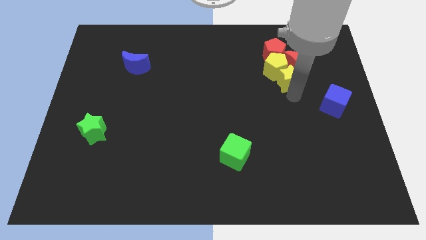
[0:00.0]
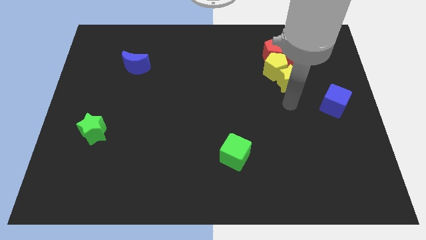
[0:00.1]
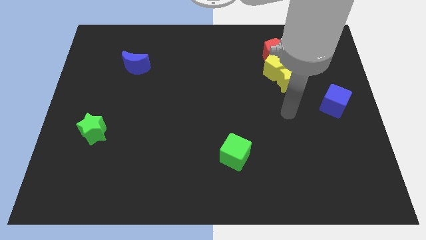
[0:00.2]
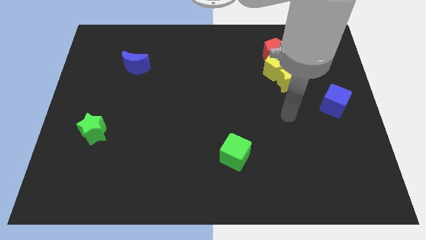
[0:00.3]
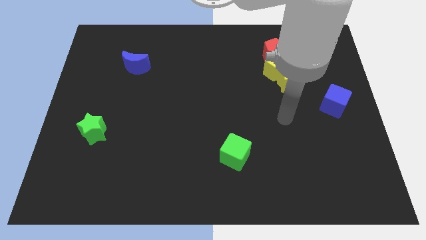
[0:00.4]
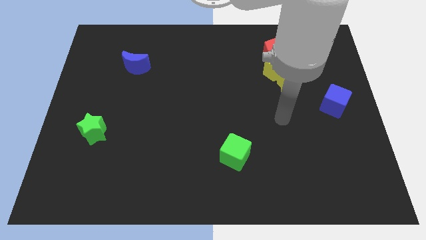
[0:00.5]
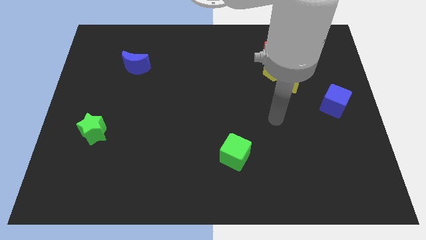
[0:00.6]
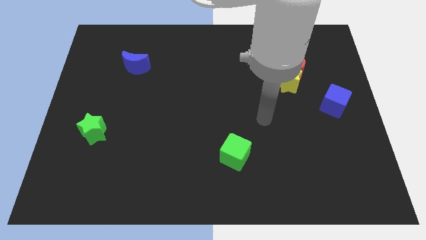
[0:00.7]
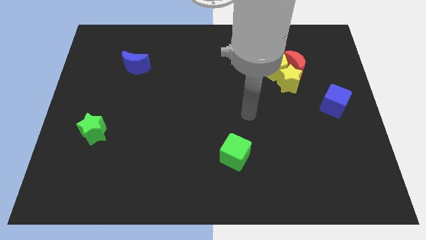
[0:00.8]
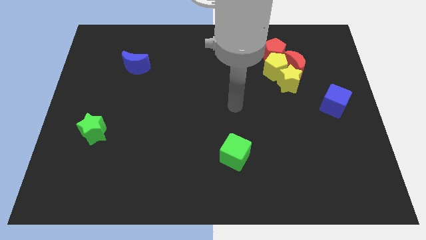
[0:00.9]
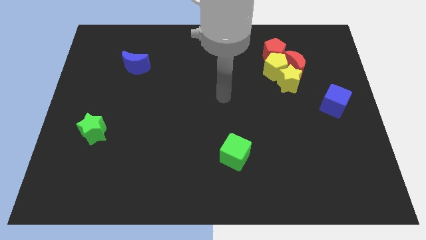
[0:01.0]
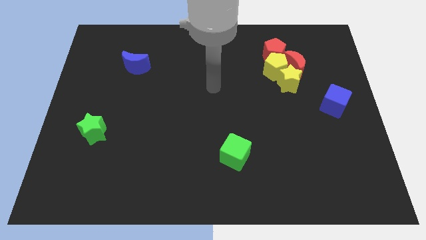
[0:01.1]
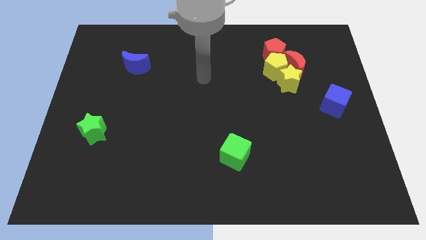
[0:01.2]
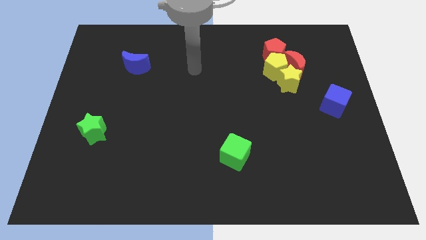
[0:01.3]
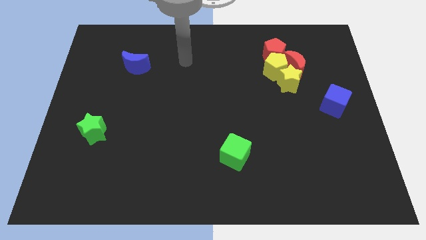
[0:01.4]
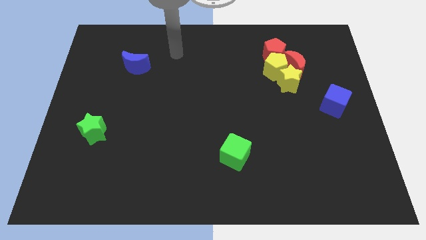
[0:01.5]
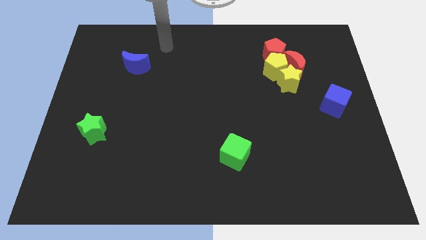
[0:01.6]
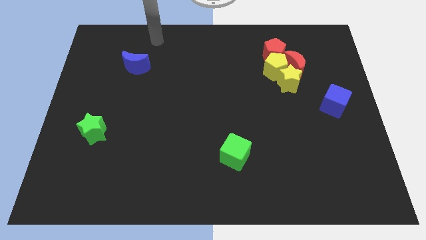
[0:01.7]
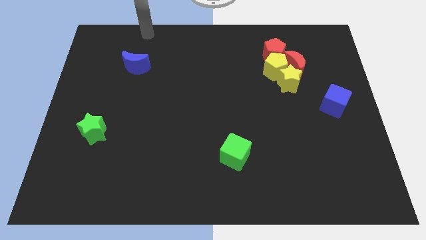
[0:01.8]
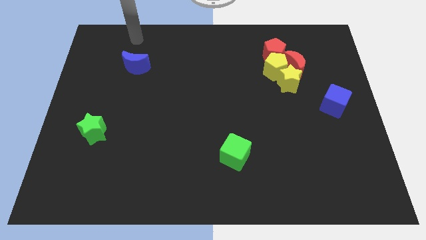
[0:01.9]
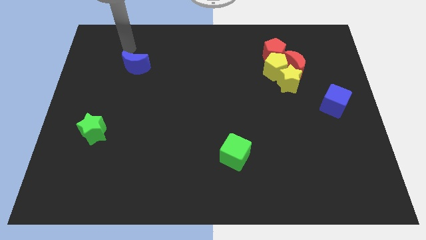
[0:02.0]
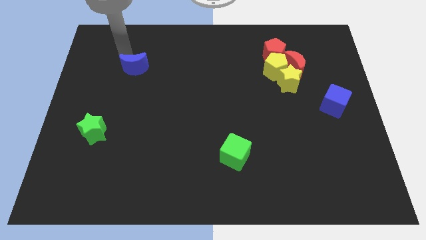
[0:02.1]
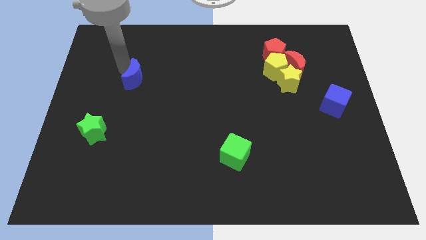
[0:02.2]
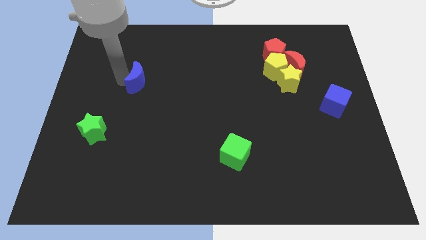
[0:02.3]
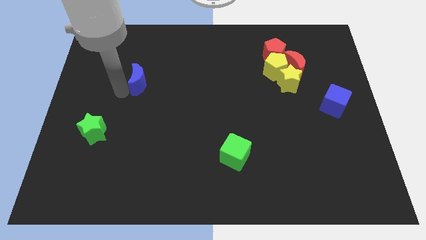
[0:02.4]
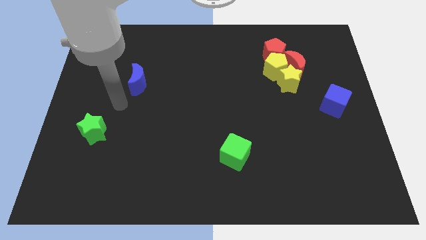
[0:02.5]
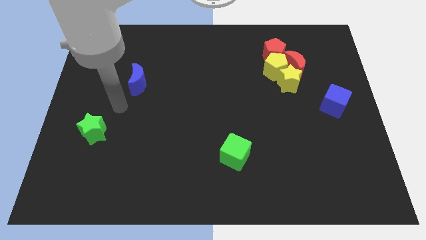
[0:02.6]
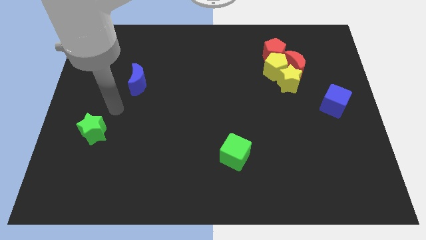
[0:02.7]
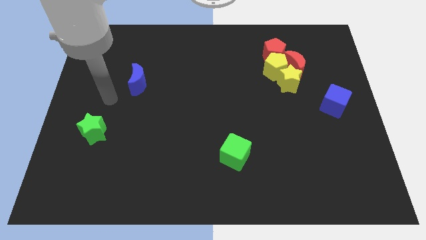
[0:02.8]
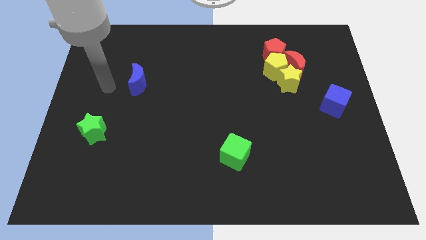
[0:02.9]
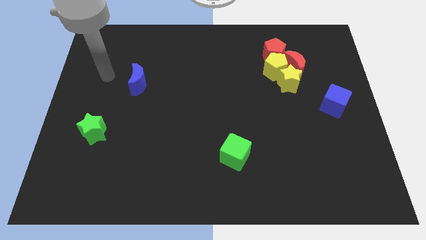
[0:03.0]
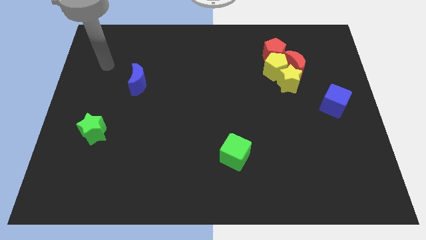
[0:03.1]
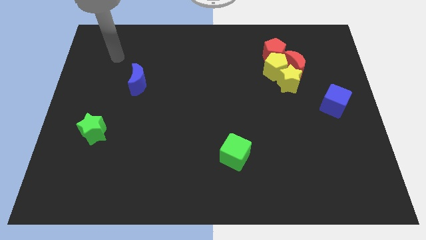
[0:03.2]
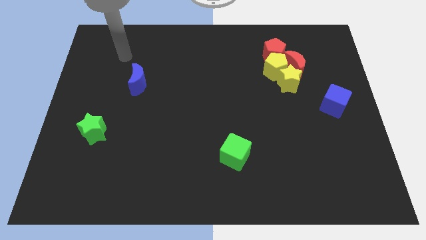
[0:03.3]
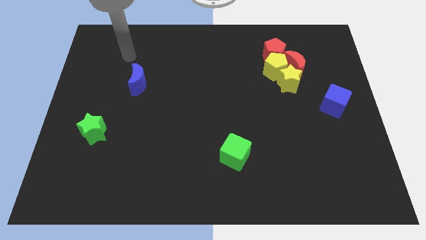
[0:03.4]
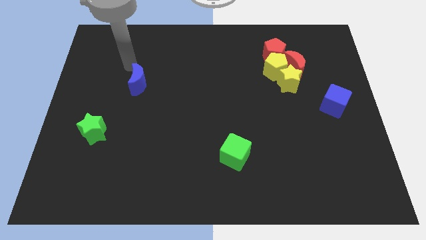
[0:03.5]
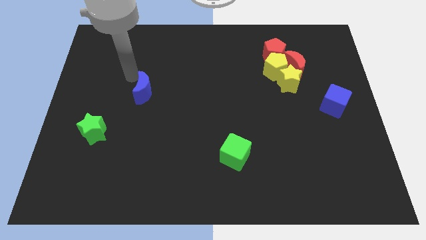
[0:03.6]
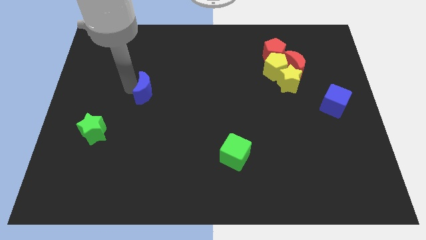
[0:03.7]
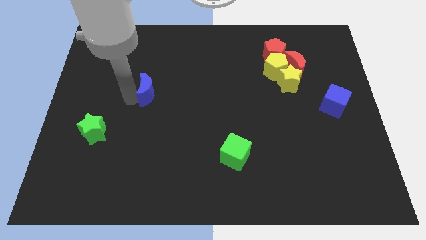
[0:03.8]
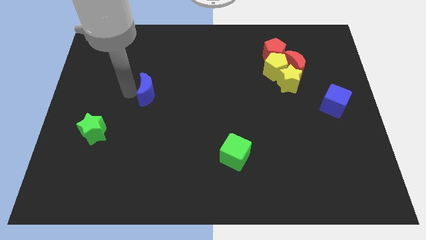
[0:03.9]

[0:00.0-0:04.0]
push the blue moon diagonally to green star

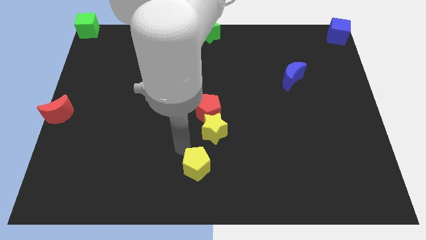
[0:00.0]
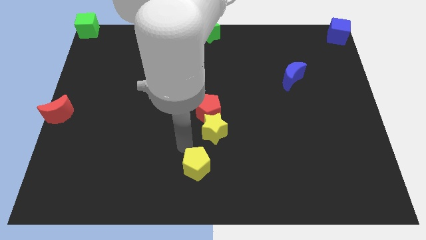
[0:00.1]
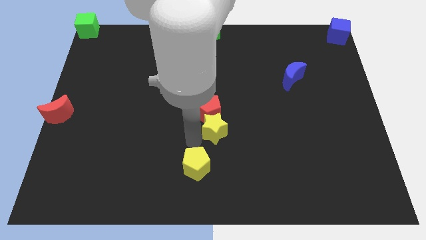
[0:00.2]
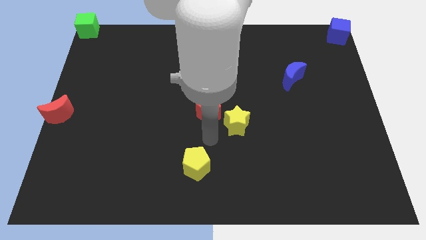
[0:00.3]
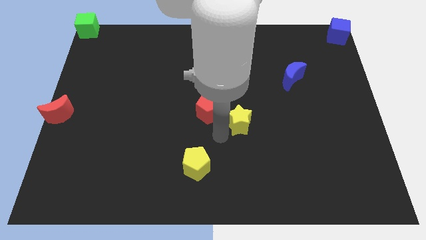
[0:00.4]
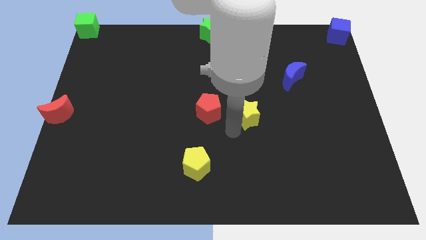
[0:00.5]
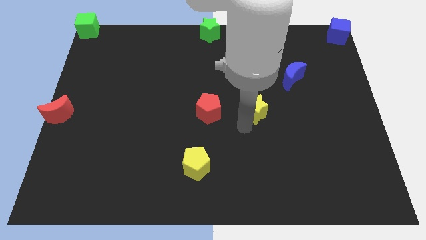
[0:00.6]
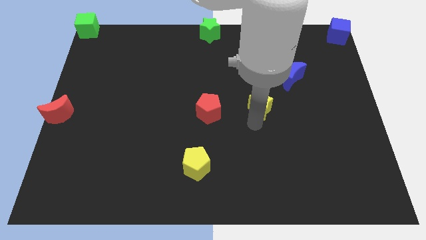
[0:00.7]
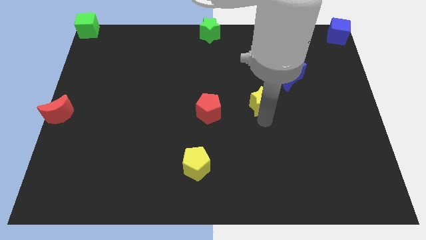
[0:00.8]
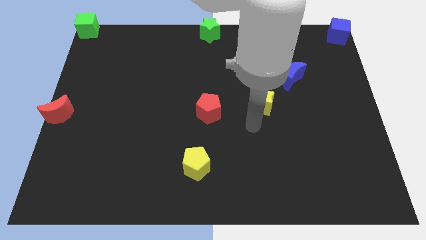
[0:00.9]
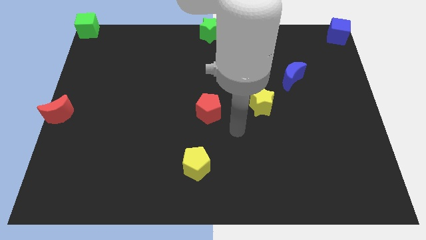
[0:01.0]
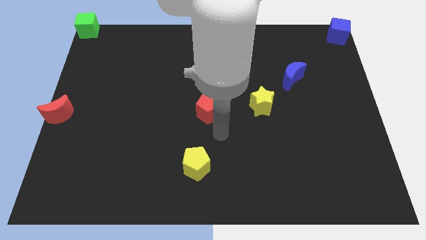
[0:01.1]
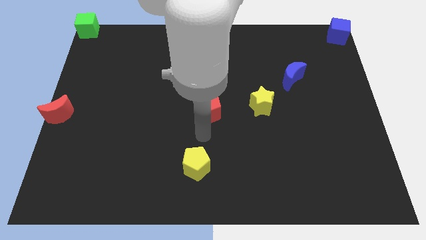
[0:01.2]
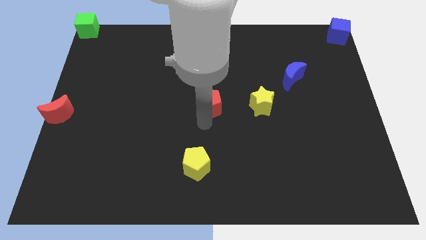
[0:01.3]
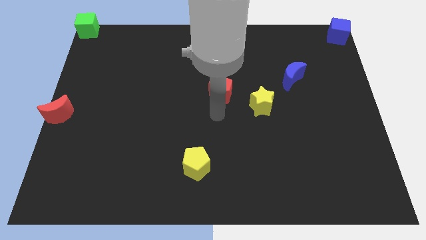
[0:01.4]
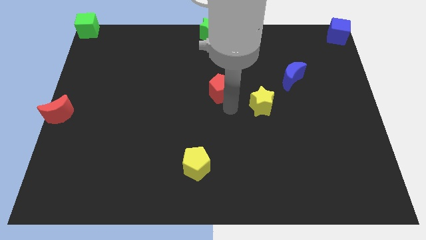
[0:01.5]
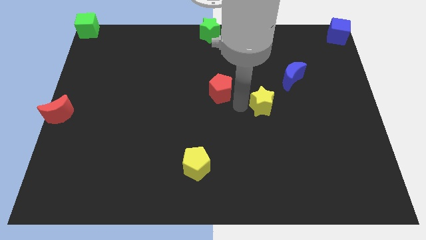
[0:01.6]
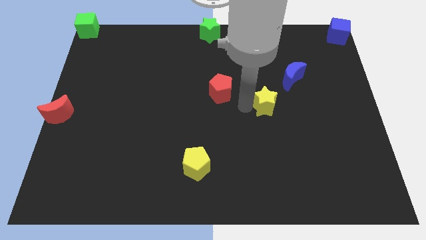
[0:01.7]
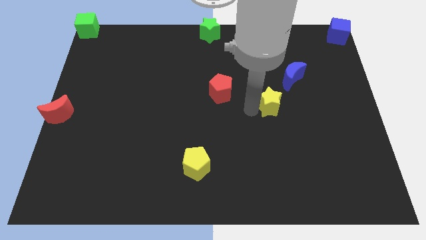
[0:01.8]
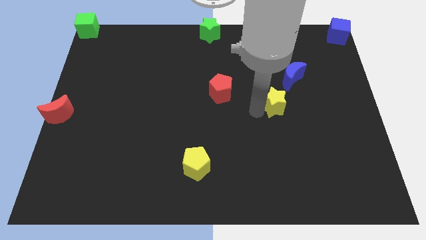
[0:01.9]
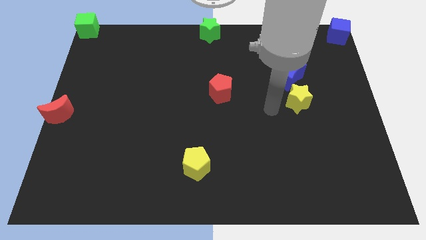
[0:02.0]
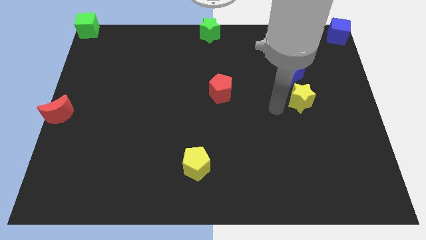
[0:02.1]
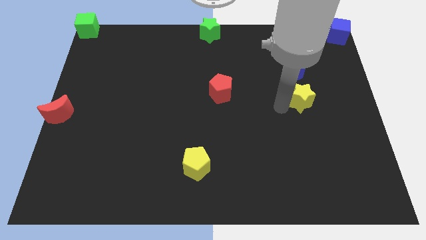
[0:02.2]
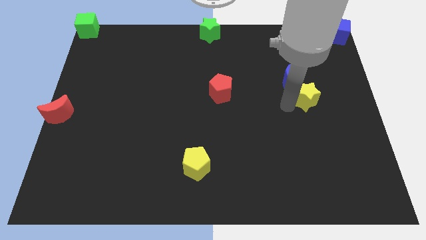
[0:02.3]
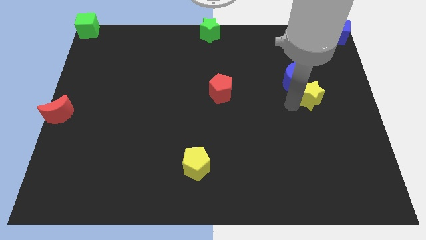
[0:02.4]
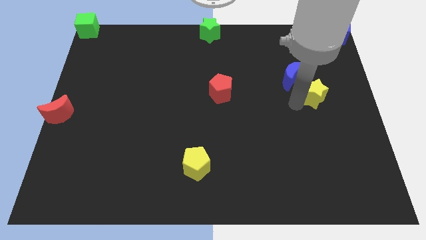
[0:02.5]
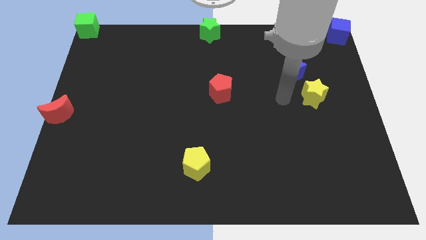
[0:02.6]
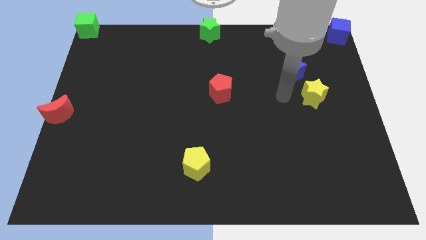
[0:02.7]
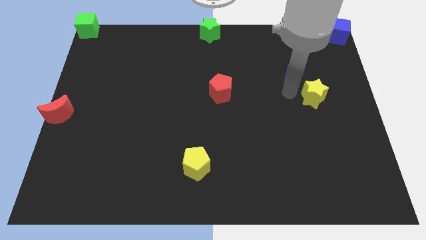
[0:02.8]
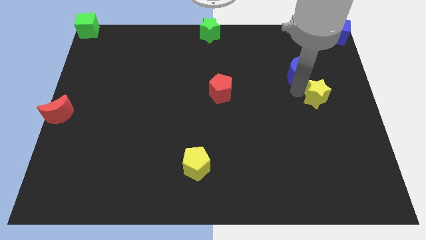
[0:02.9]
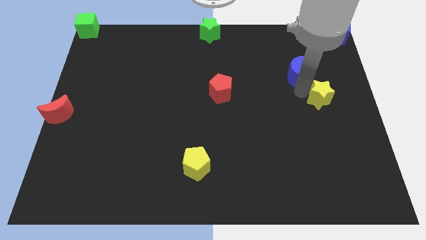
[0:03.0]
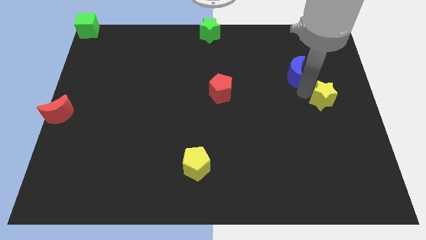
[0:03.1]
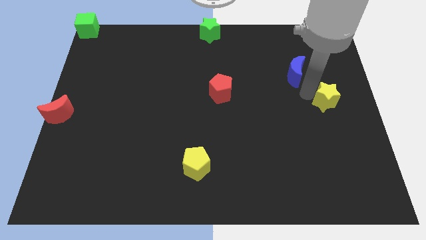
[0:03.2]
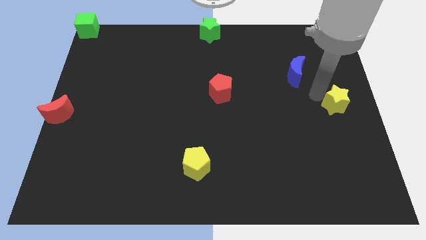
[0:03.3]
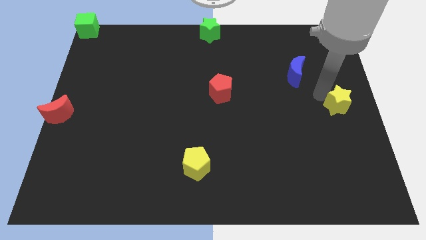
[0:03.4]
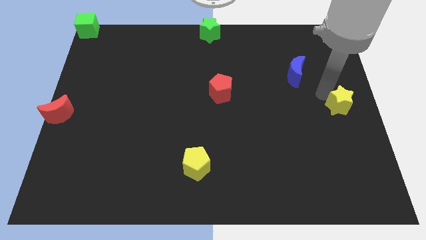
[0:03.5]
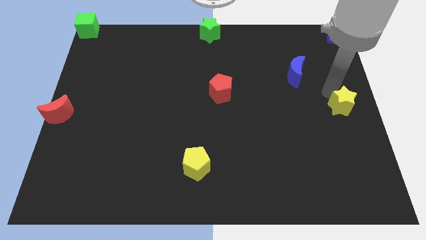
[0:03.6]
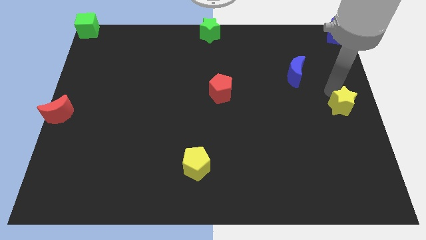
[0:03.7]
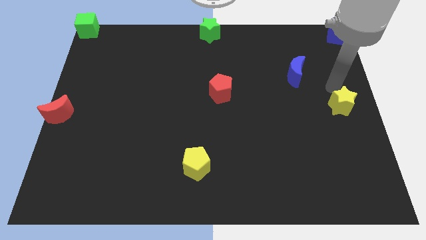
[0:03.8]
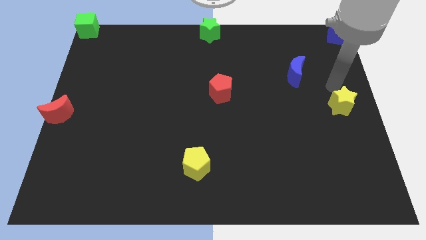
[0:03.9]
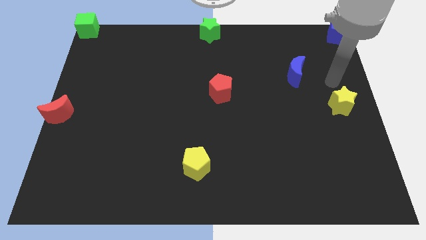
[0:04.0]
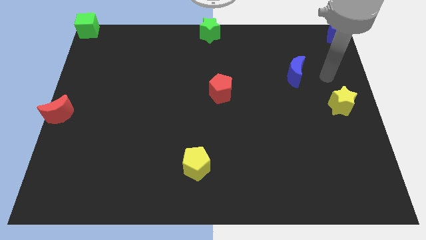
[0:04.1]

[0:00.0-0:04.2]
move yellow star to the center right

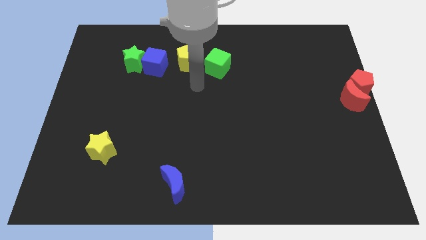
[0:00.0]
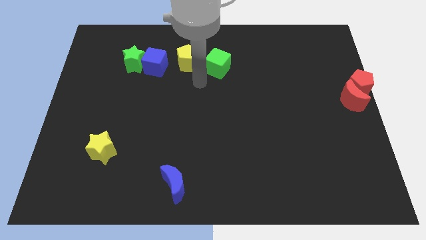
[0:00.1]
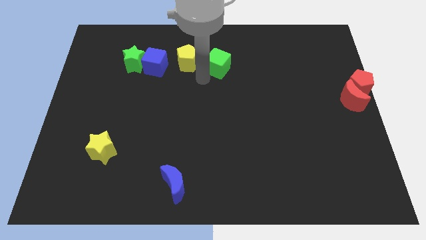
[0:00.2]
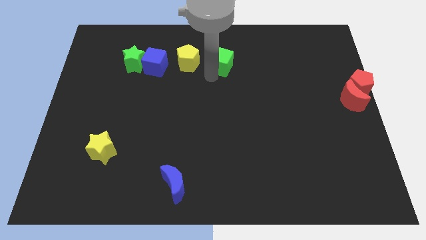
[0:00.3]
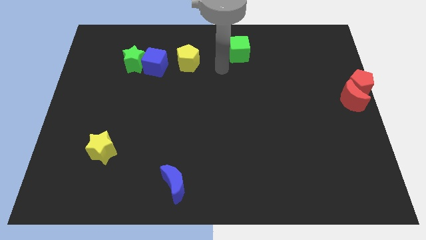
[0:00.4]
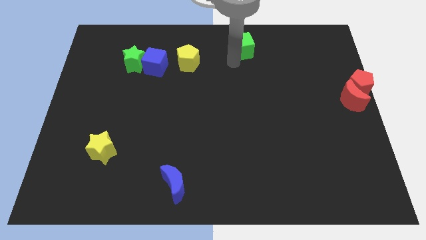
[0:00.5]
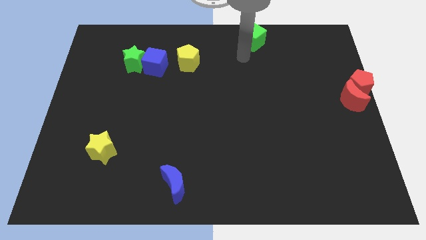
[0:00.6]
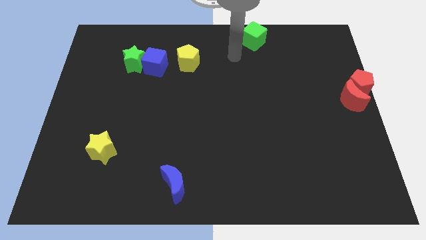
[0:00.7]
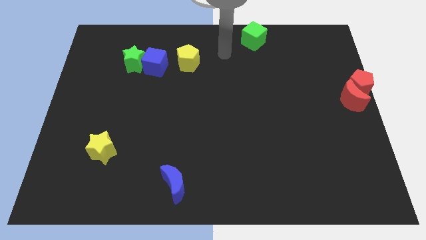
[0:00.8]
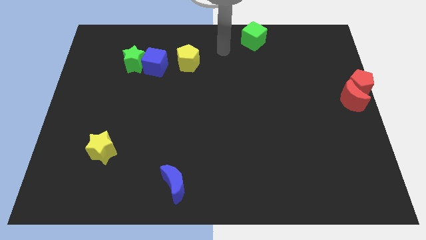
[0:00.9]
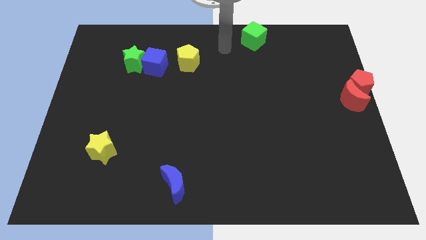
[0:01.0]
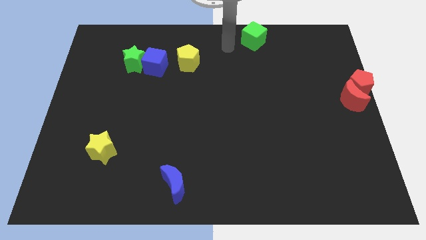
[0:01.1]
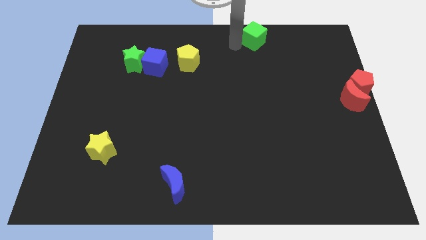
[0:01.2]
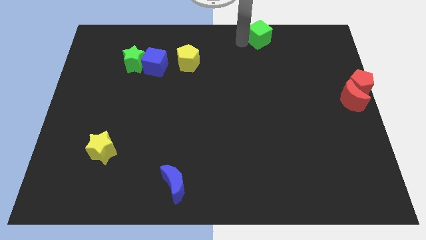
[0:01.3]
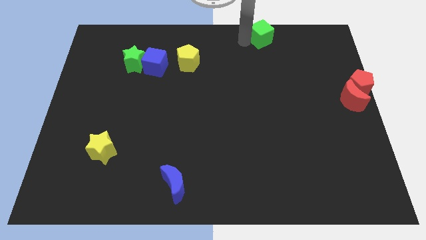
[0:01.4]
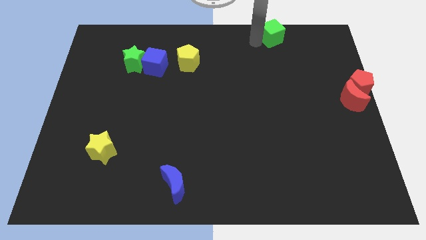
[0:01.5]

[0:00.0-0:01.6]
push the green cube to the top side of the board
